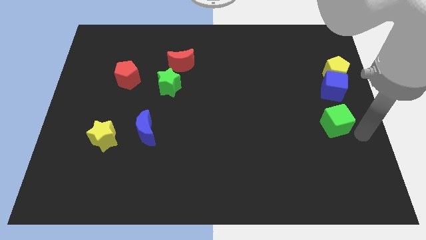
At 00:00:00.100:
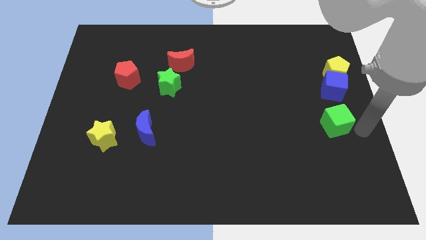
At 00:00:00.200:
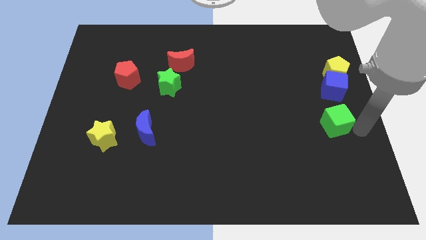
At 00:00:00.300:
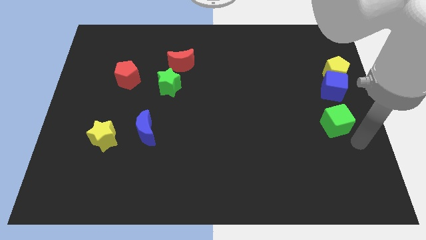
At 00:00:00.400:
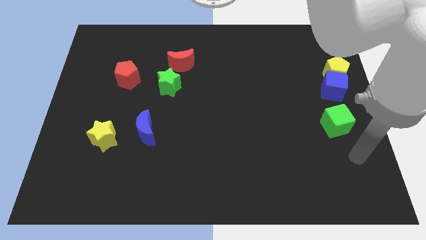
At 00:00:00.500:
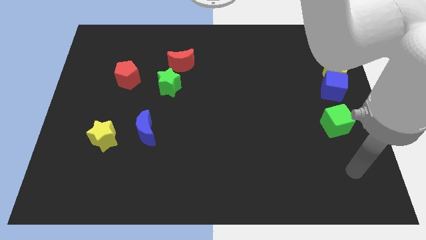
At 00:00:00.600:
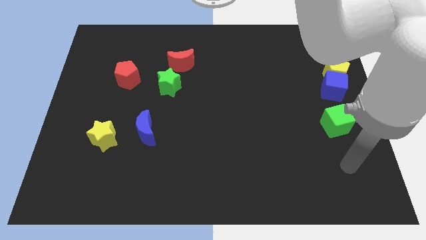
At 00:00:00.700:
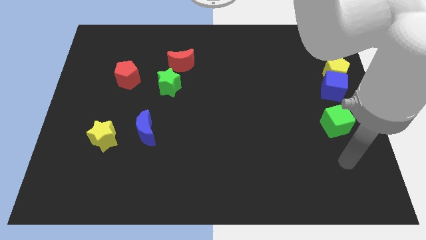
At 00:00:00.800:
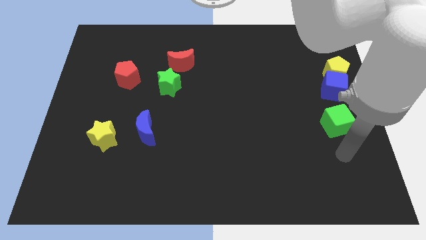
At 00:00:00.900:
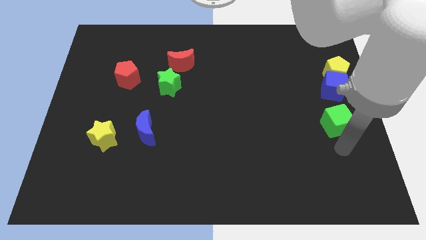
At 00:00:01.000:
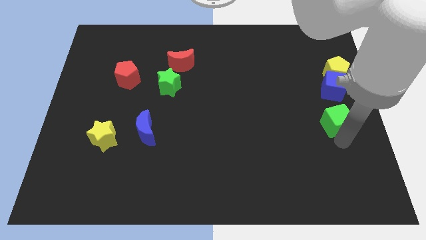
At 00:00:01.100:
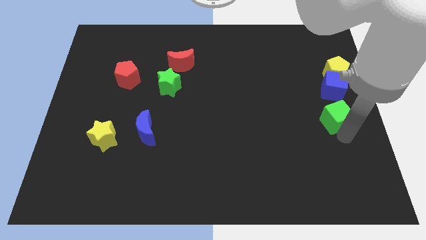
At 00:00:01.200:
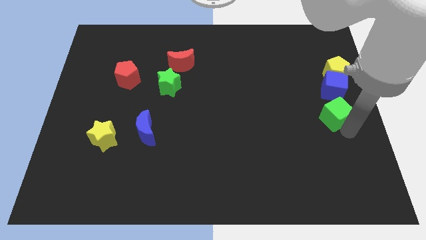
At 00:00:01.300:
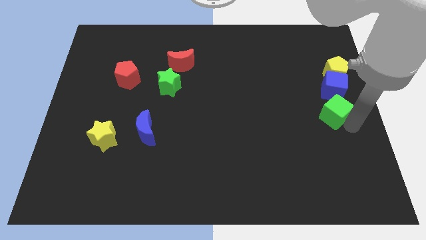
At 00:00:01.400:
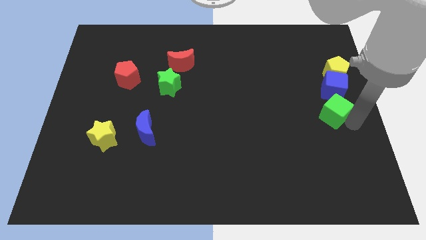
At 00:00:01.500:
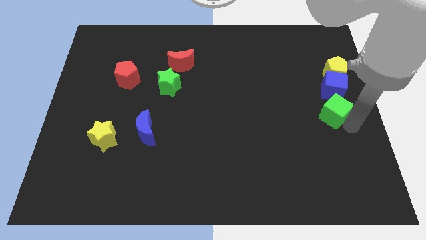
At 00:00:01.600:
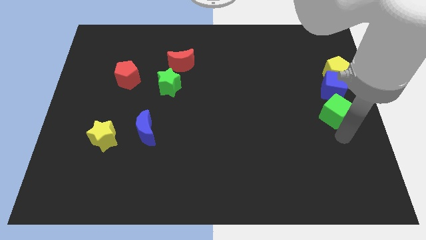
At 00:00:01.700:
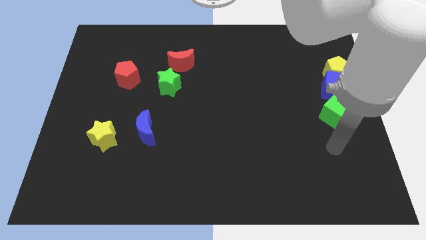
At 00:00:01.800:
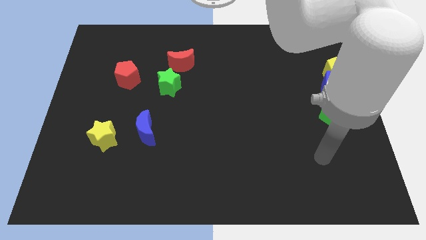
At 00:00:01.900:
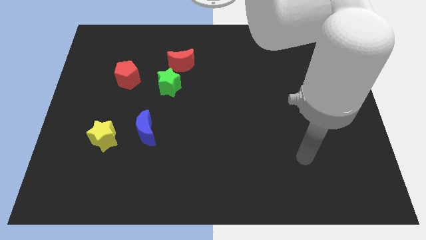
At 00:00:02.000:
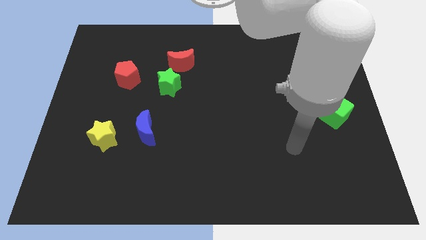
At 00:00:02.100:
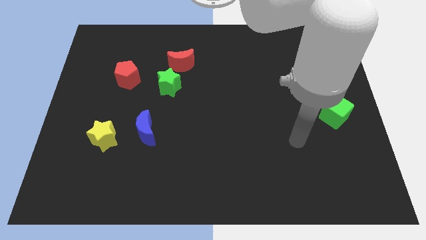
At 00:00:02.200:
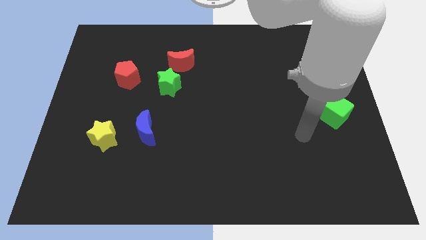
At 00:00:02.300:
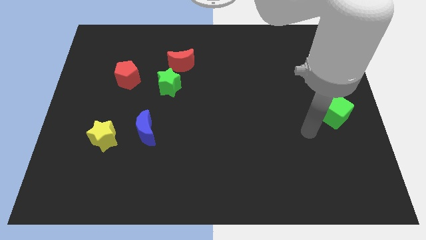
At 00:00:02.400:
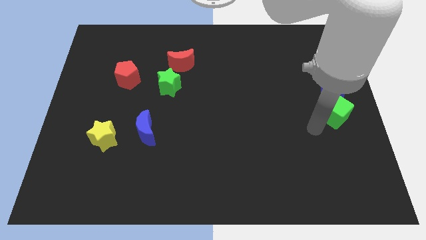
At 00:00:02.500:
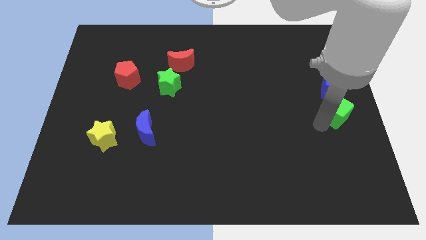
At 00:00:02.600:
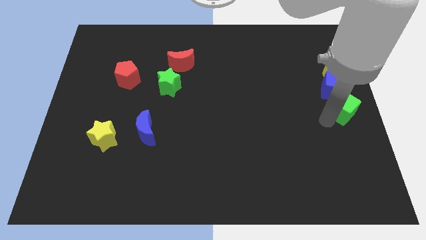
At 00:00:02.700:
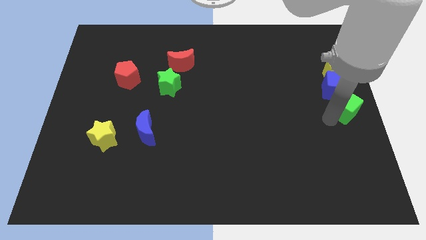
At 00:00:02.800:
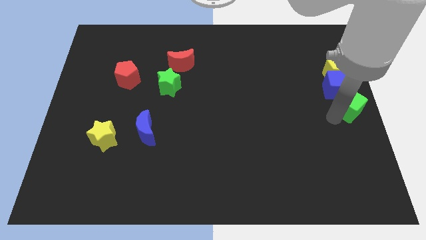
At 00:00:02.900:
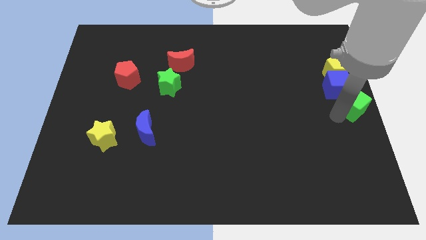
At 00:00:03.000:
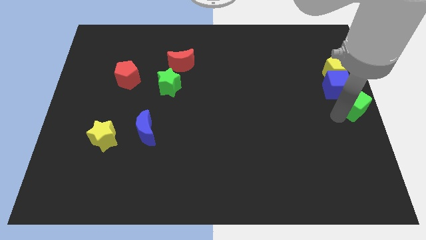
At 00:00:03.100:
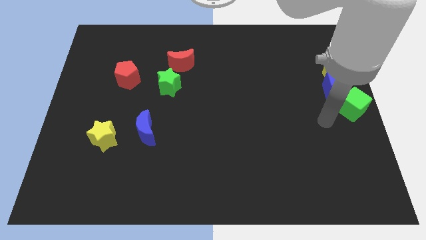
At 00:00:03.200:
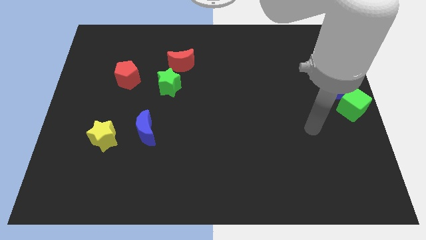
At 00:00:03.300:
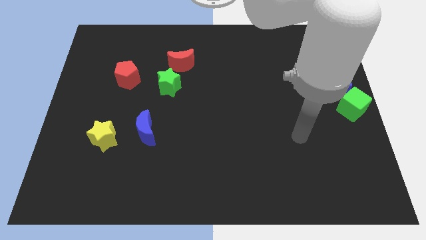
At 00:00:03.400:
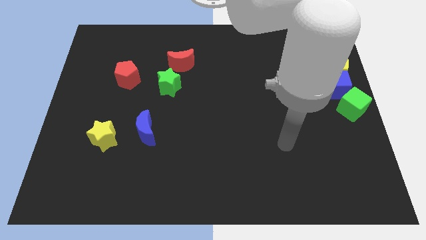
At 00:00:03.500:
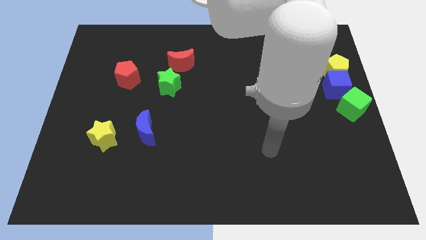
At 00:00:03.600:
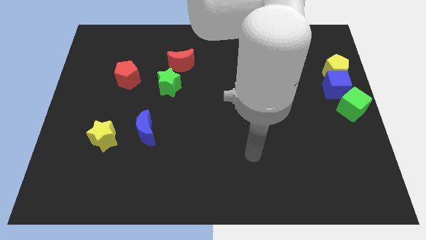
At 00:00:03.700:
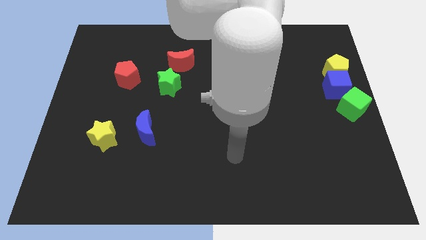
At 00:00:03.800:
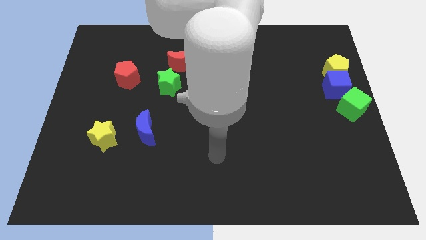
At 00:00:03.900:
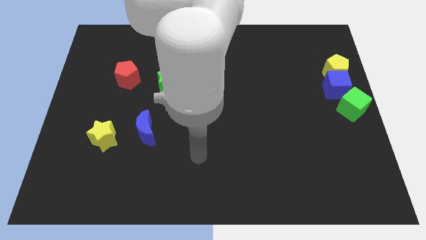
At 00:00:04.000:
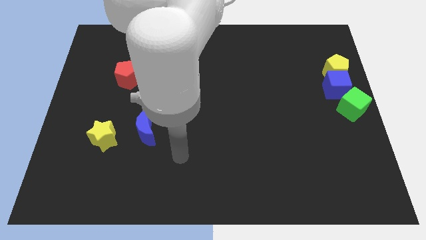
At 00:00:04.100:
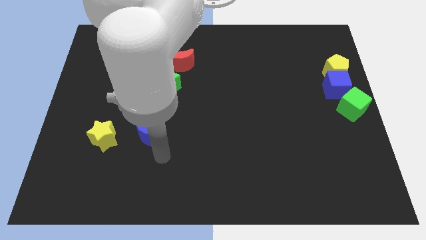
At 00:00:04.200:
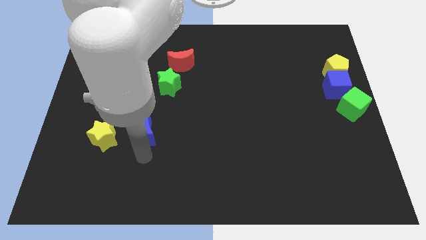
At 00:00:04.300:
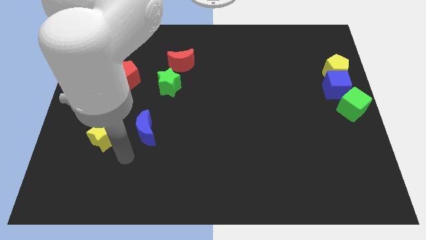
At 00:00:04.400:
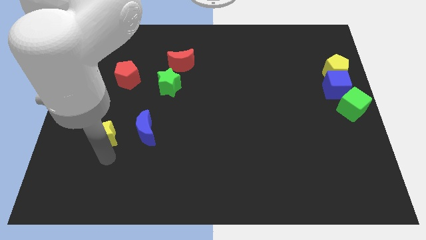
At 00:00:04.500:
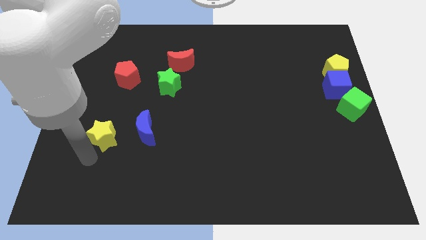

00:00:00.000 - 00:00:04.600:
place your arm below yellow star

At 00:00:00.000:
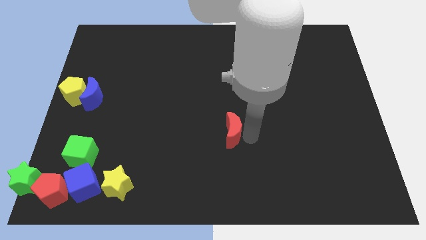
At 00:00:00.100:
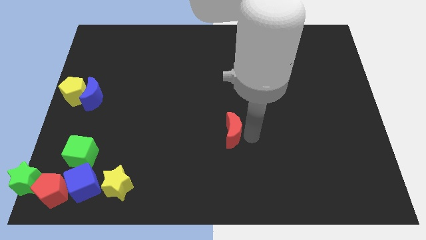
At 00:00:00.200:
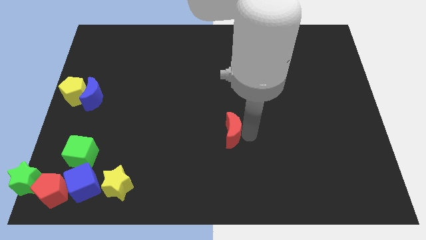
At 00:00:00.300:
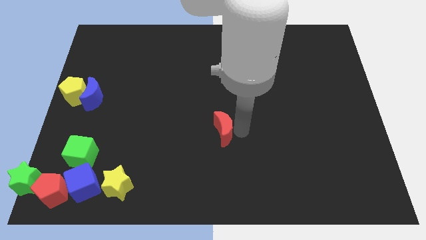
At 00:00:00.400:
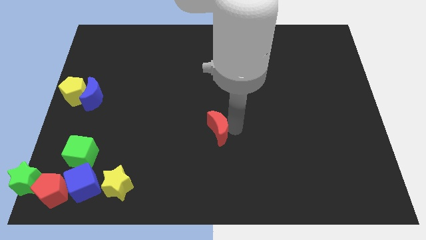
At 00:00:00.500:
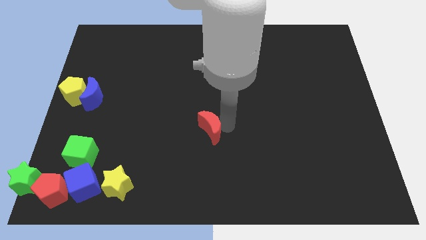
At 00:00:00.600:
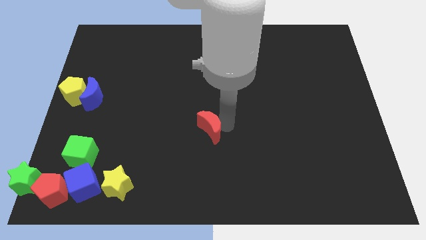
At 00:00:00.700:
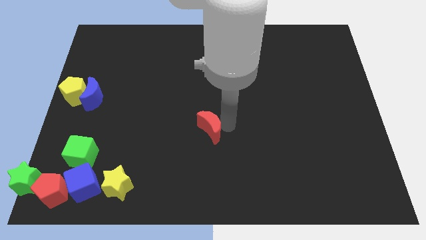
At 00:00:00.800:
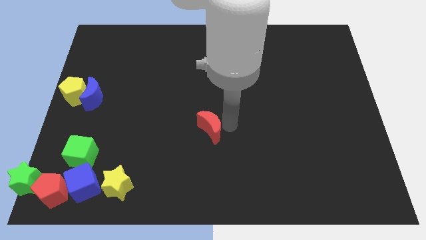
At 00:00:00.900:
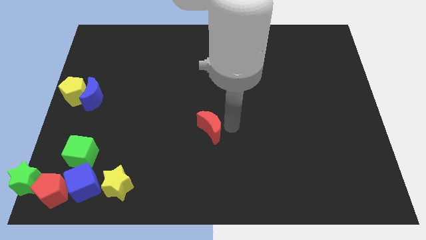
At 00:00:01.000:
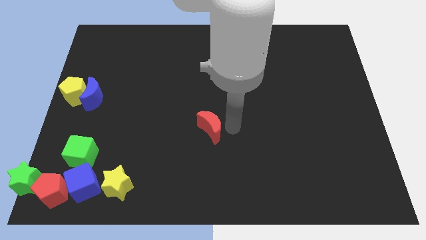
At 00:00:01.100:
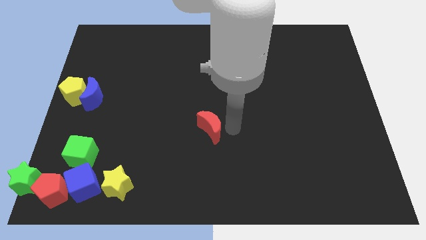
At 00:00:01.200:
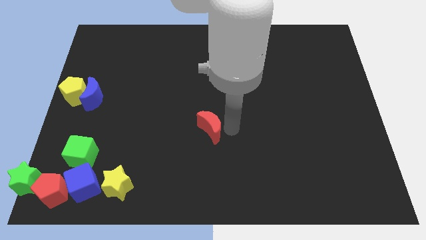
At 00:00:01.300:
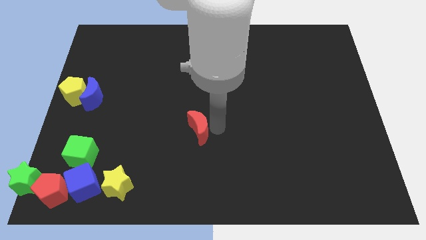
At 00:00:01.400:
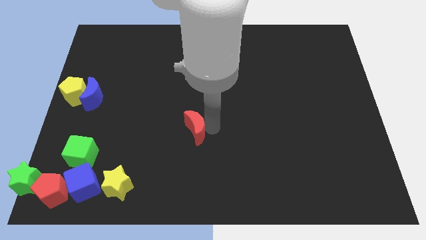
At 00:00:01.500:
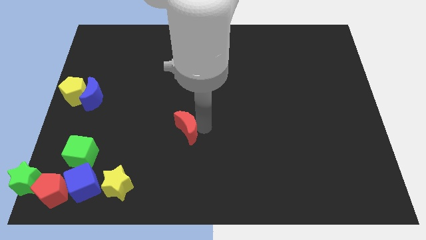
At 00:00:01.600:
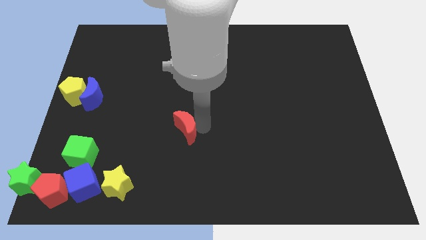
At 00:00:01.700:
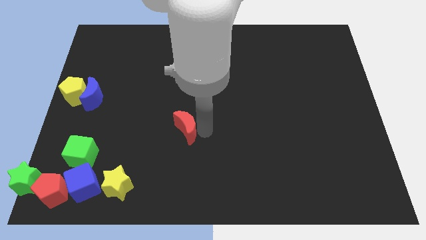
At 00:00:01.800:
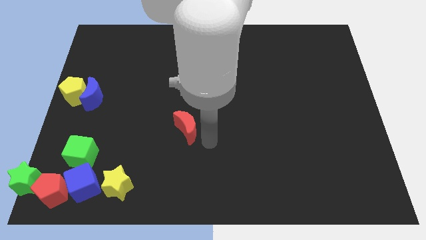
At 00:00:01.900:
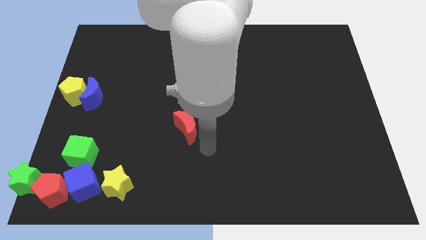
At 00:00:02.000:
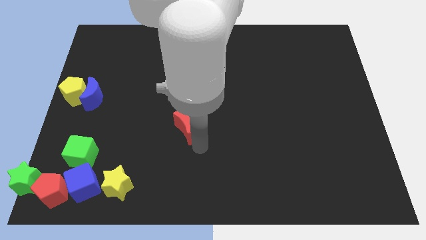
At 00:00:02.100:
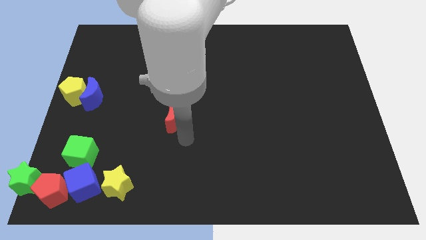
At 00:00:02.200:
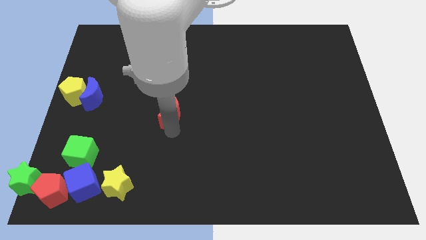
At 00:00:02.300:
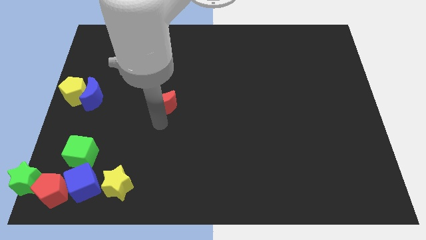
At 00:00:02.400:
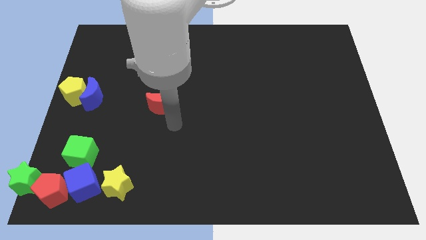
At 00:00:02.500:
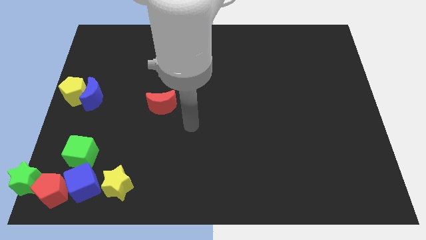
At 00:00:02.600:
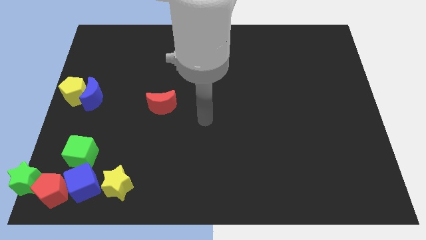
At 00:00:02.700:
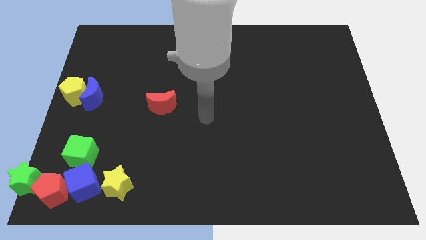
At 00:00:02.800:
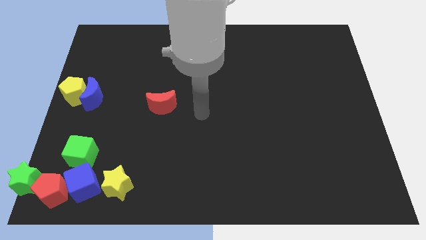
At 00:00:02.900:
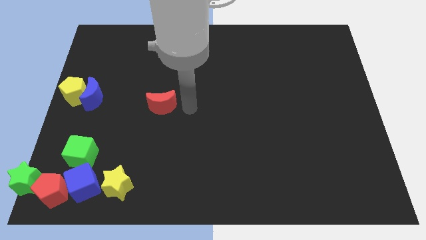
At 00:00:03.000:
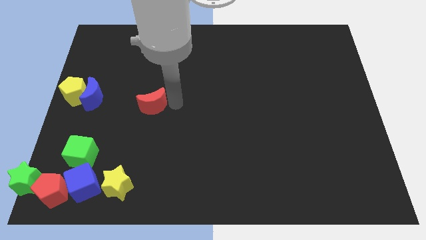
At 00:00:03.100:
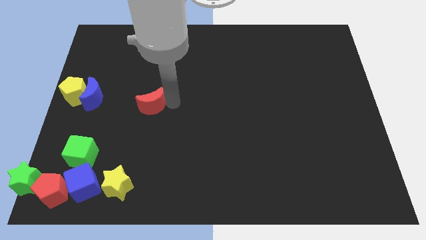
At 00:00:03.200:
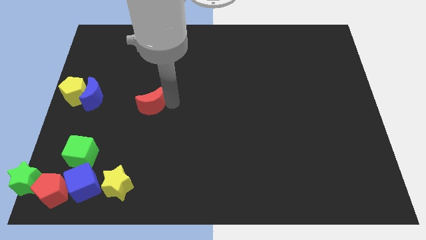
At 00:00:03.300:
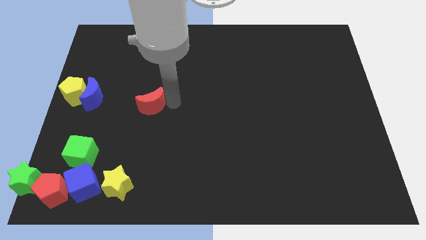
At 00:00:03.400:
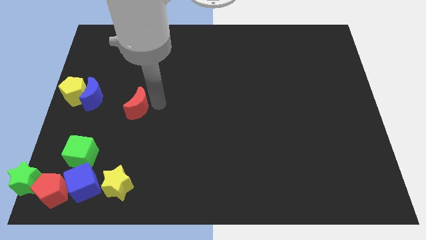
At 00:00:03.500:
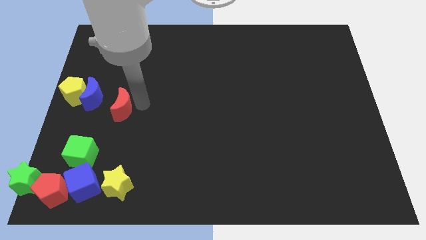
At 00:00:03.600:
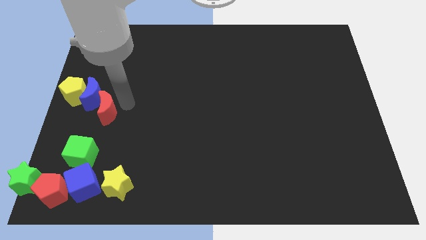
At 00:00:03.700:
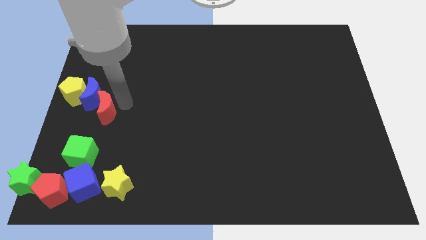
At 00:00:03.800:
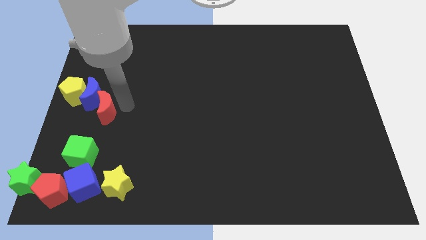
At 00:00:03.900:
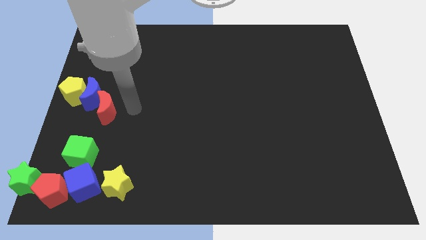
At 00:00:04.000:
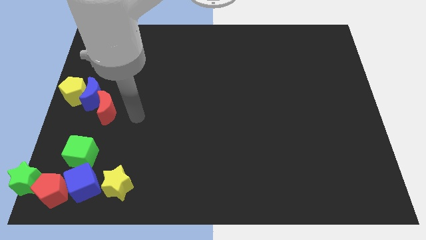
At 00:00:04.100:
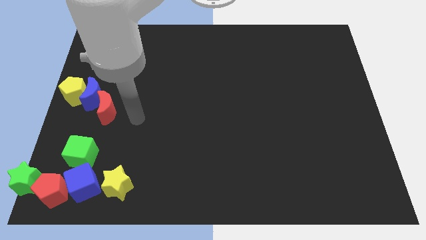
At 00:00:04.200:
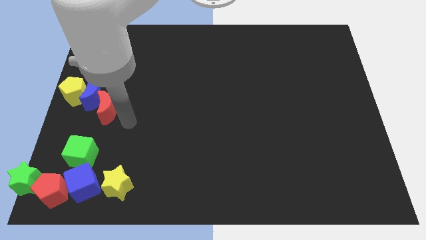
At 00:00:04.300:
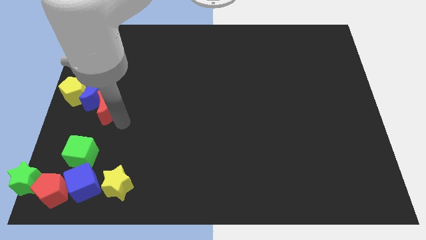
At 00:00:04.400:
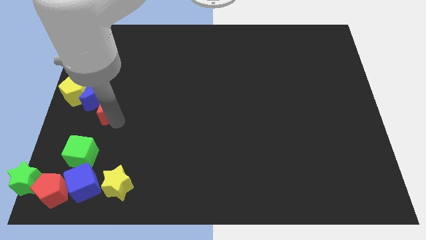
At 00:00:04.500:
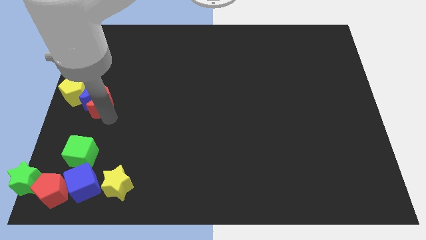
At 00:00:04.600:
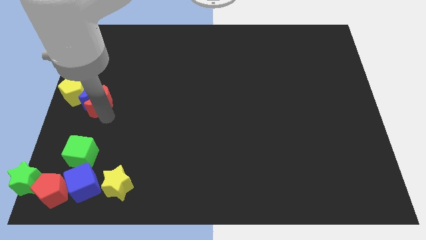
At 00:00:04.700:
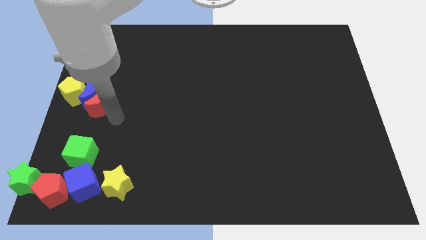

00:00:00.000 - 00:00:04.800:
move the red moon into the blue crescent
